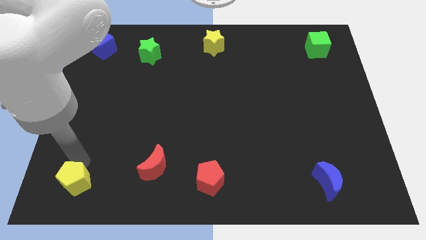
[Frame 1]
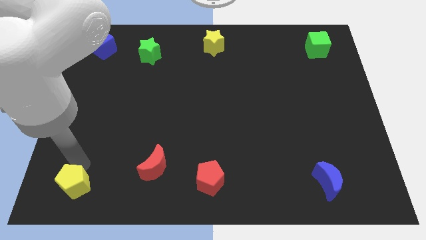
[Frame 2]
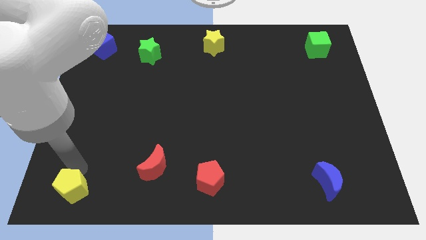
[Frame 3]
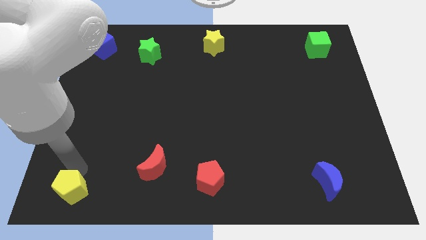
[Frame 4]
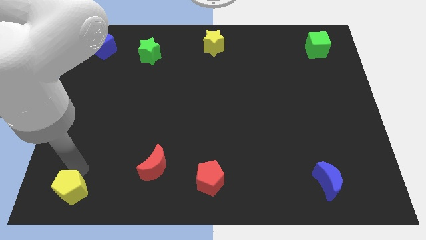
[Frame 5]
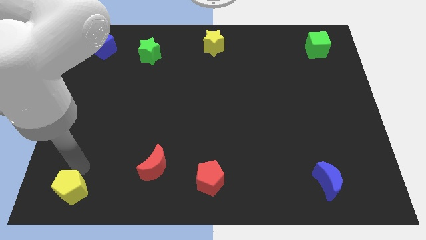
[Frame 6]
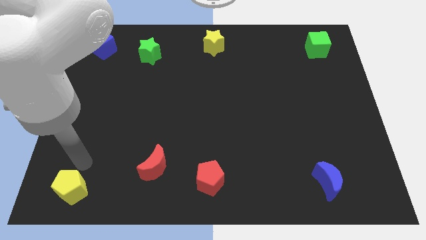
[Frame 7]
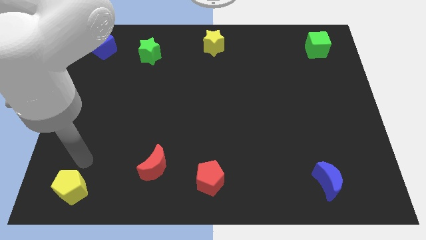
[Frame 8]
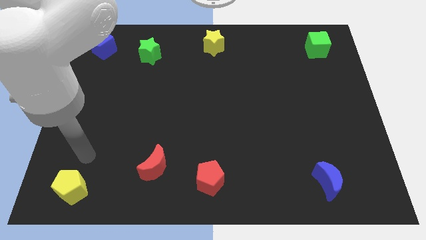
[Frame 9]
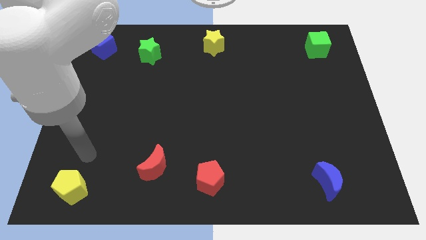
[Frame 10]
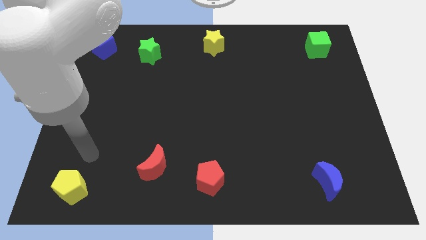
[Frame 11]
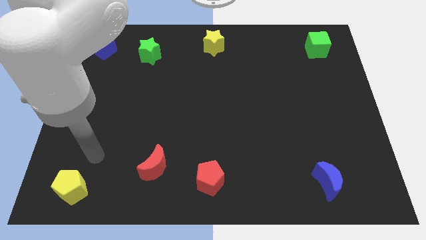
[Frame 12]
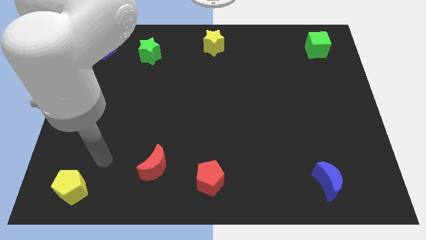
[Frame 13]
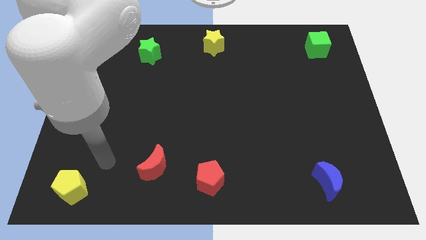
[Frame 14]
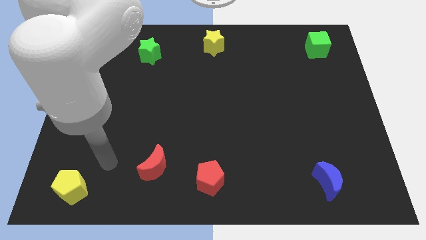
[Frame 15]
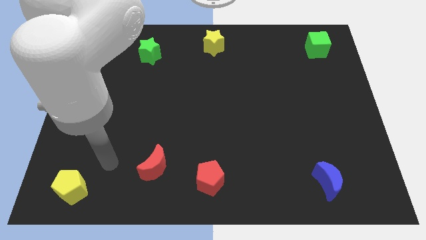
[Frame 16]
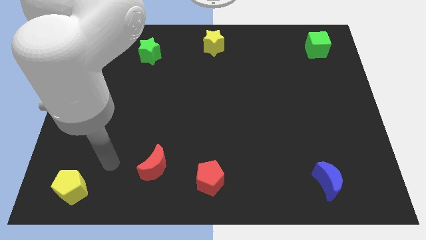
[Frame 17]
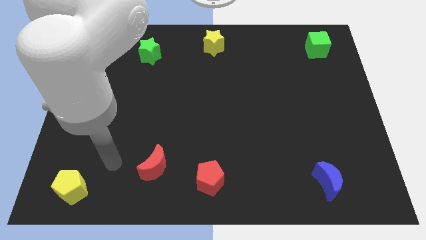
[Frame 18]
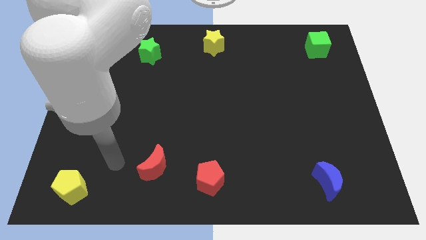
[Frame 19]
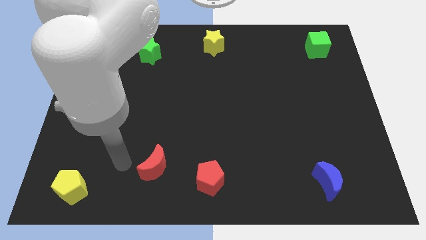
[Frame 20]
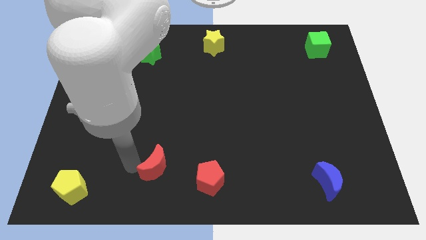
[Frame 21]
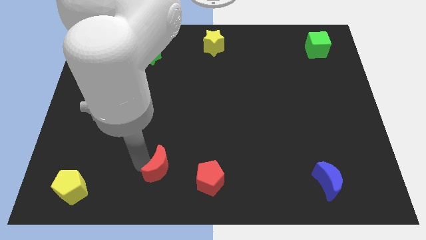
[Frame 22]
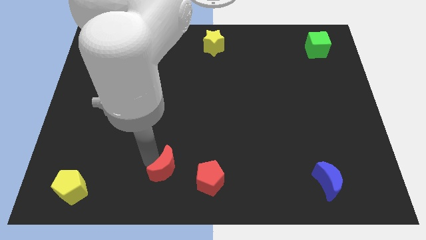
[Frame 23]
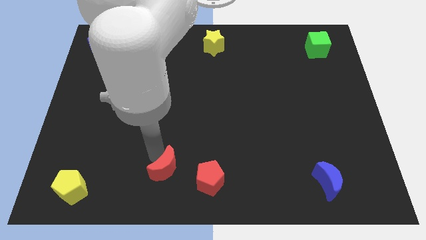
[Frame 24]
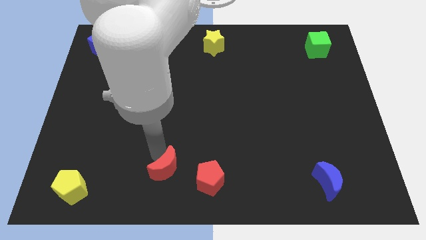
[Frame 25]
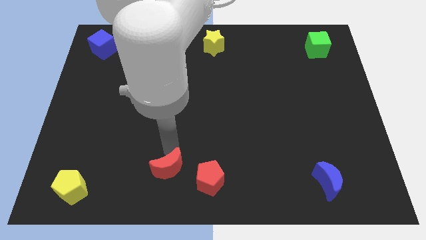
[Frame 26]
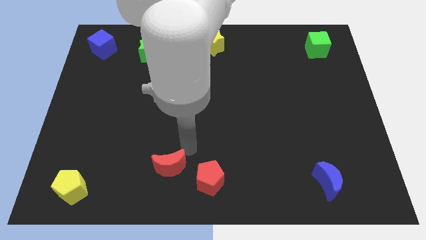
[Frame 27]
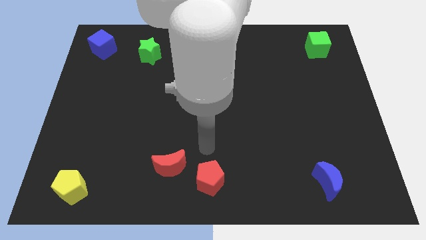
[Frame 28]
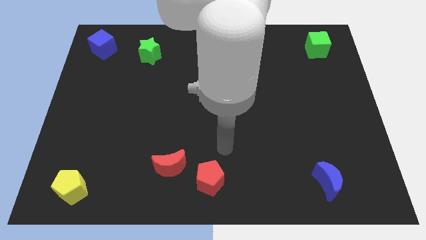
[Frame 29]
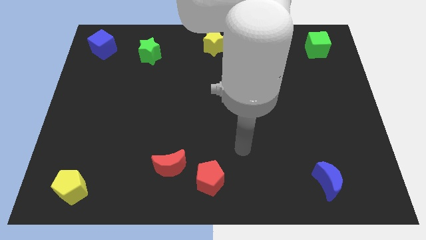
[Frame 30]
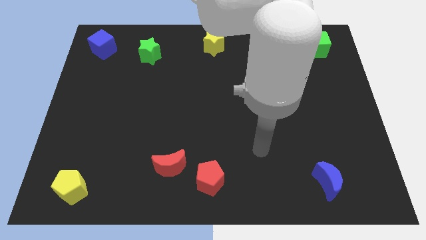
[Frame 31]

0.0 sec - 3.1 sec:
move your arm away from the yellow pentagon

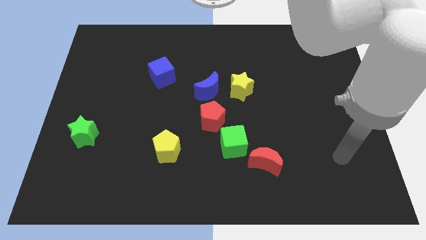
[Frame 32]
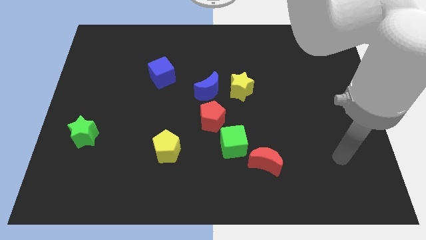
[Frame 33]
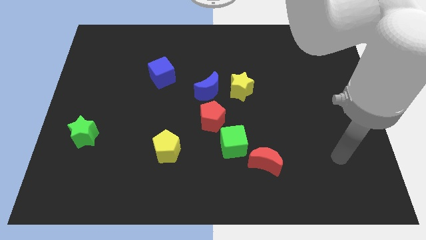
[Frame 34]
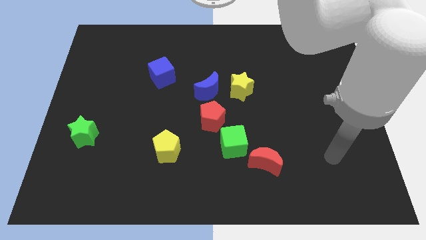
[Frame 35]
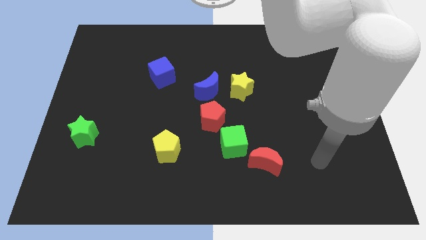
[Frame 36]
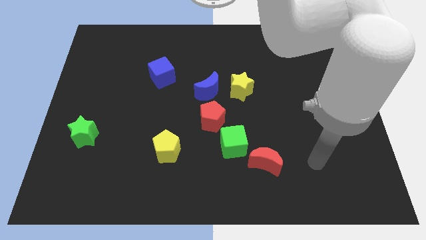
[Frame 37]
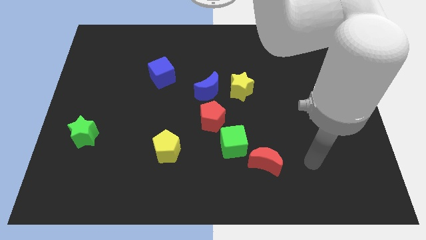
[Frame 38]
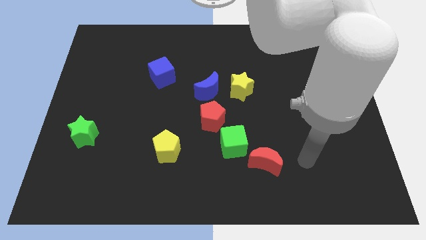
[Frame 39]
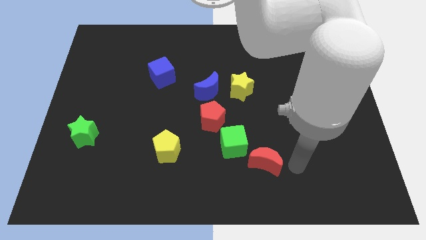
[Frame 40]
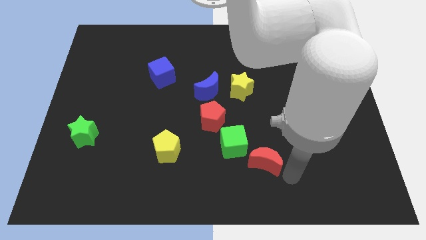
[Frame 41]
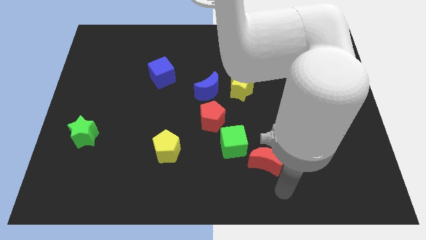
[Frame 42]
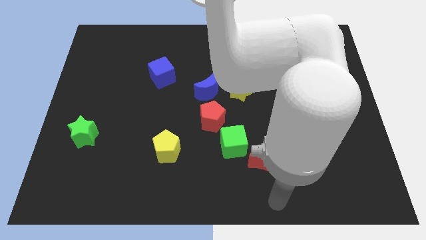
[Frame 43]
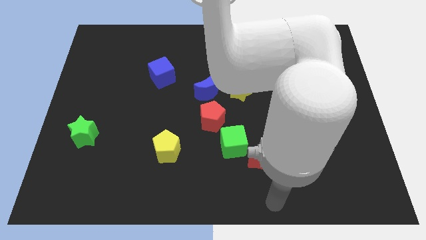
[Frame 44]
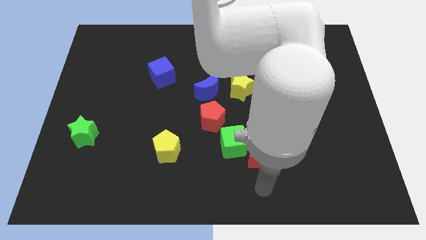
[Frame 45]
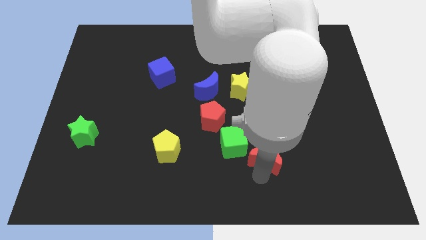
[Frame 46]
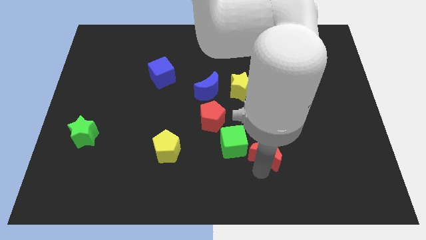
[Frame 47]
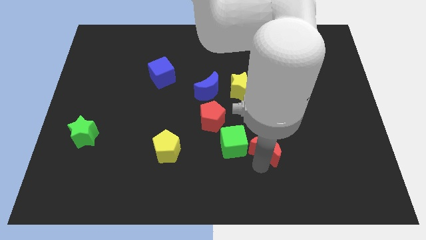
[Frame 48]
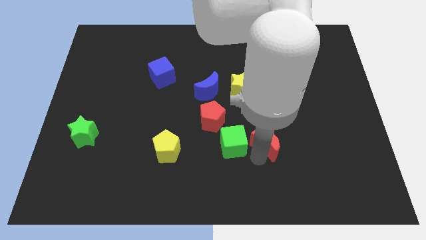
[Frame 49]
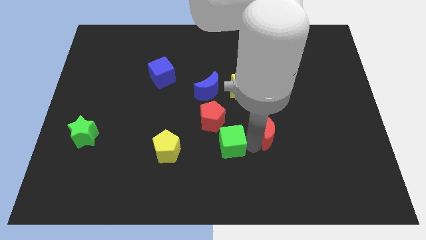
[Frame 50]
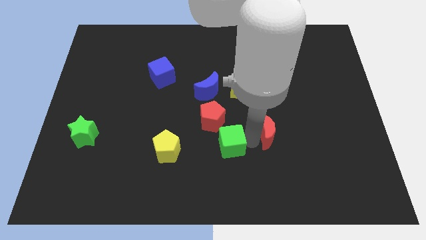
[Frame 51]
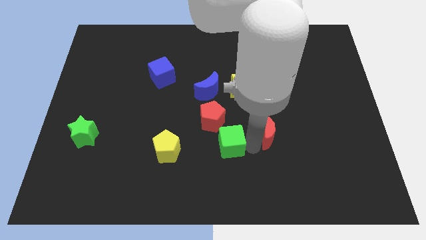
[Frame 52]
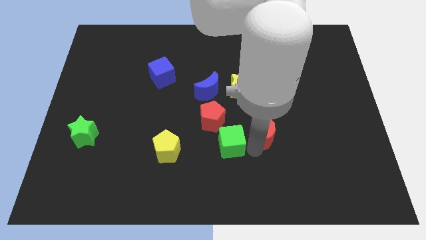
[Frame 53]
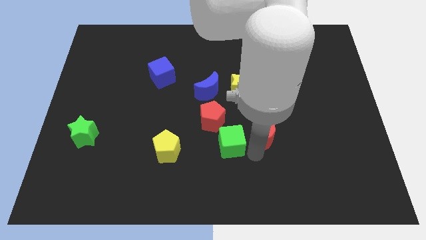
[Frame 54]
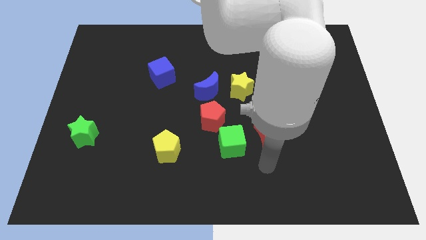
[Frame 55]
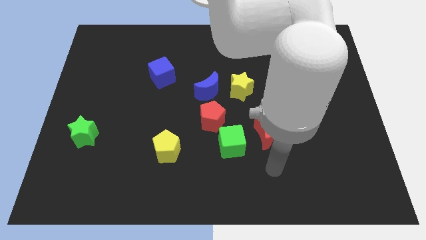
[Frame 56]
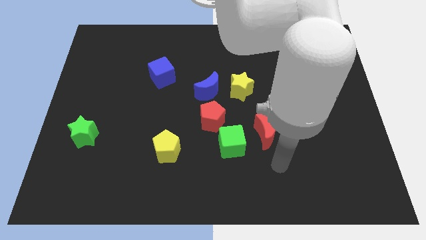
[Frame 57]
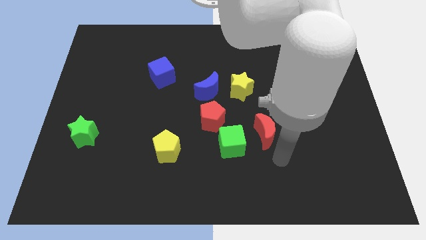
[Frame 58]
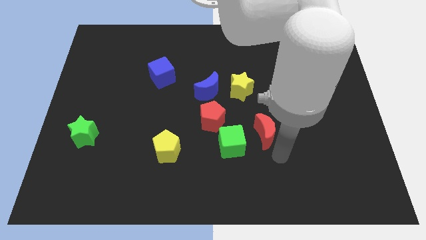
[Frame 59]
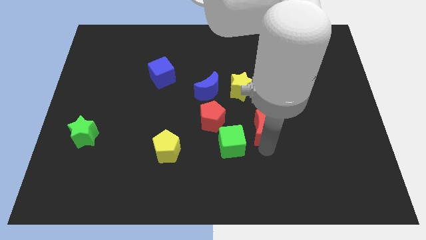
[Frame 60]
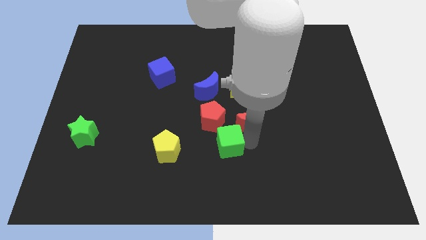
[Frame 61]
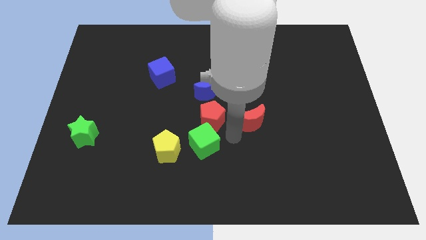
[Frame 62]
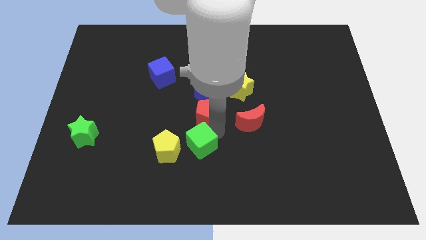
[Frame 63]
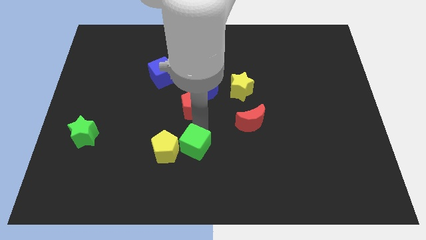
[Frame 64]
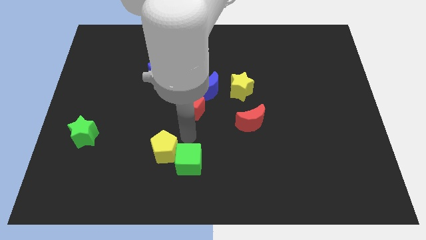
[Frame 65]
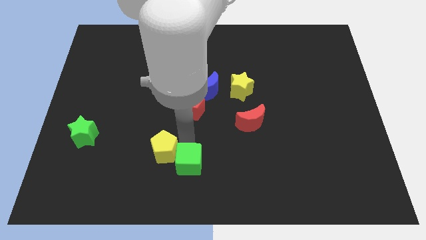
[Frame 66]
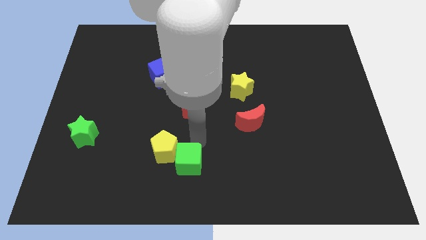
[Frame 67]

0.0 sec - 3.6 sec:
push the green cube into the yellow pentagon

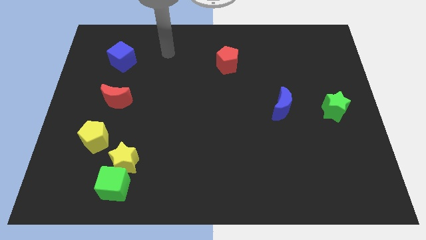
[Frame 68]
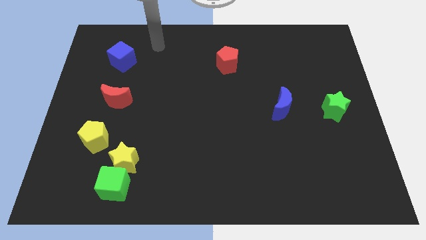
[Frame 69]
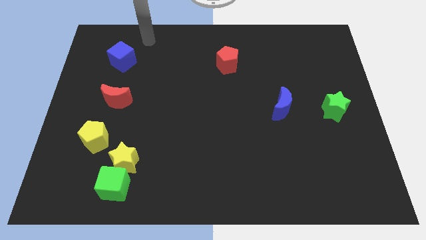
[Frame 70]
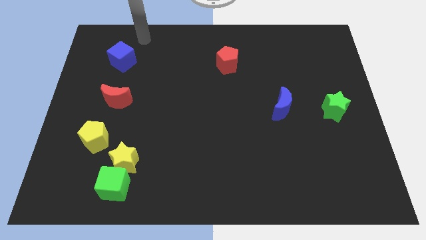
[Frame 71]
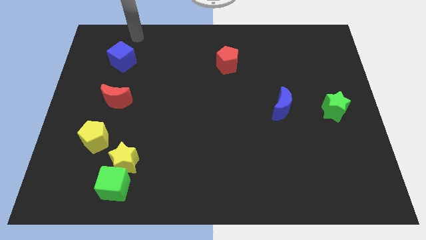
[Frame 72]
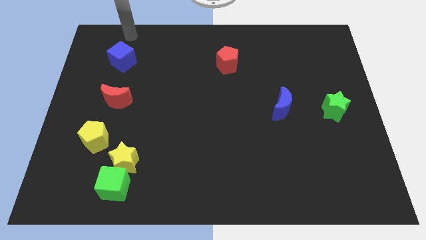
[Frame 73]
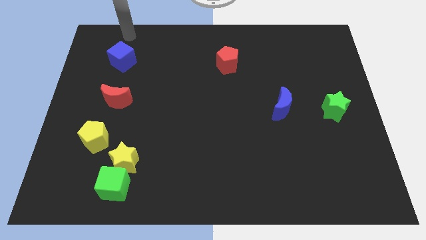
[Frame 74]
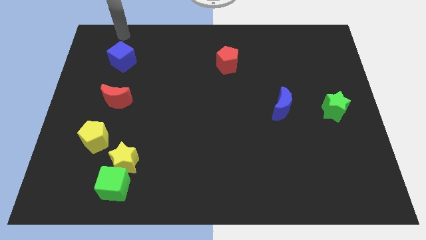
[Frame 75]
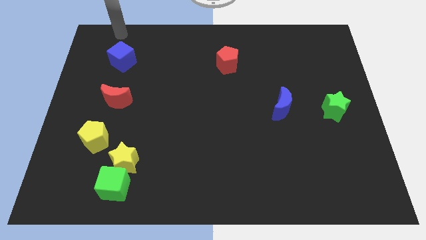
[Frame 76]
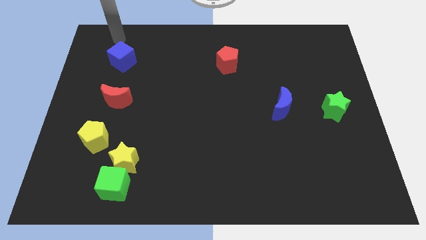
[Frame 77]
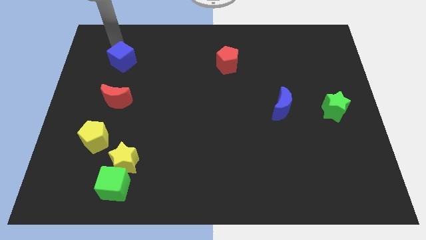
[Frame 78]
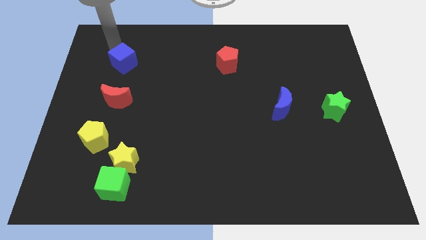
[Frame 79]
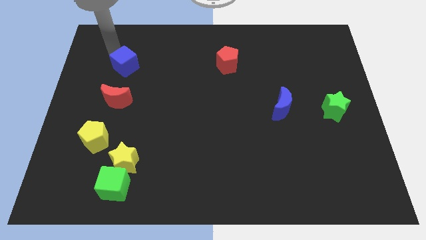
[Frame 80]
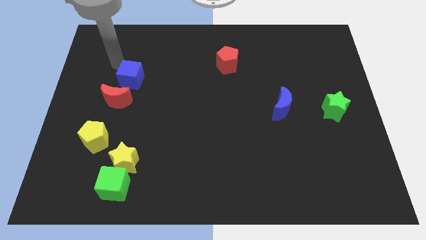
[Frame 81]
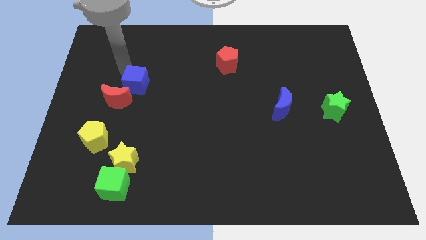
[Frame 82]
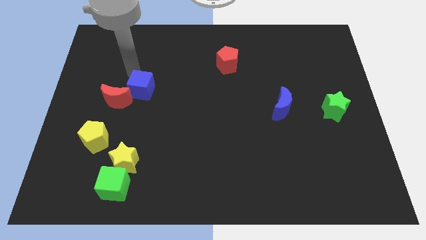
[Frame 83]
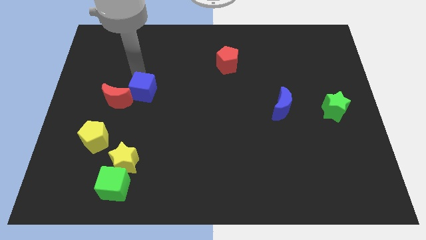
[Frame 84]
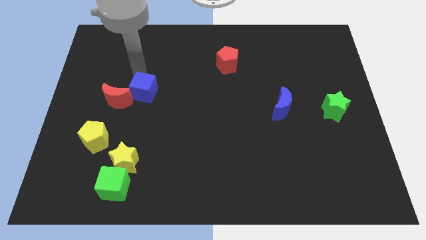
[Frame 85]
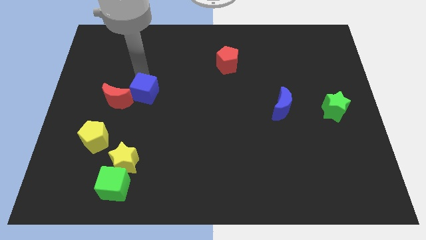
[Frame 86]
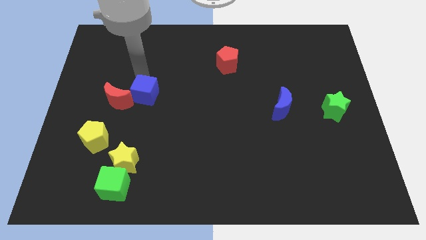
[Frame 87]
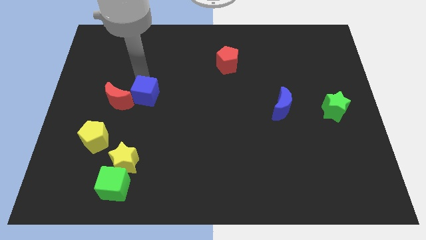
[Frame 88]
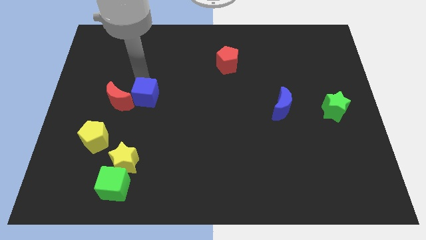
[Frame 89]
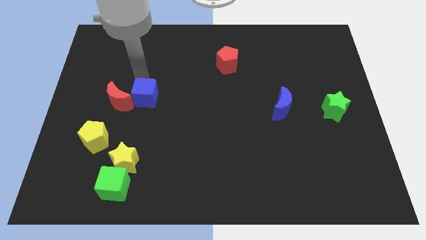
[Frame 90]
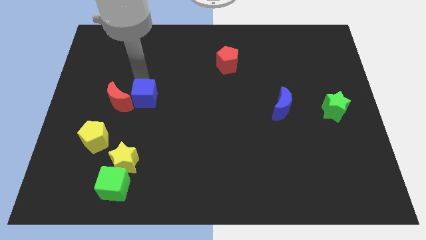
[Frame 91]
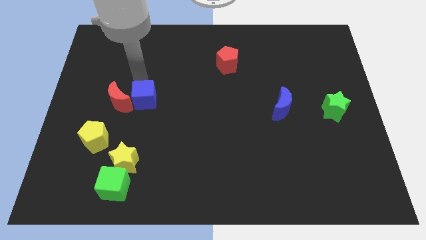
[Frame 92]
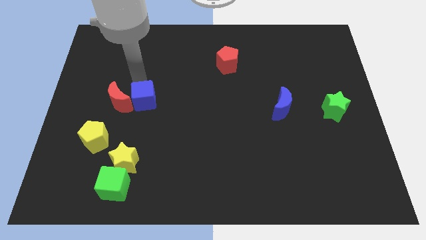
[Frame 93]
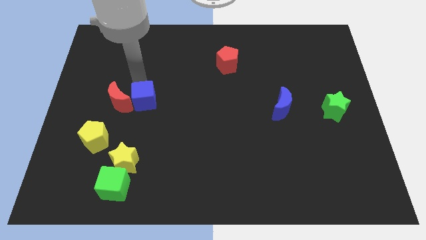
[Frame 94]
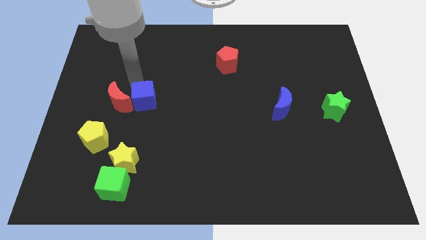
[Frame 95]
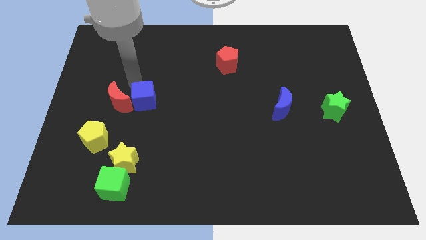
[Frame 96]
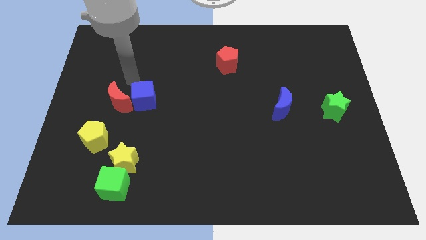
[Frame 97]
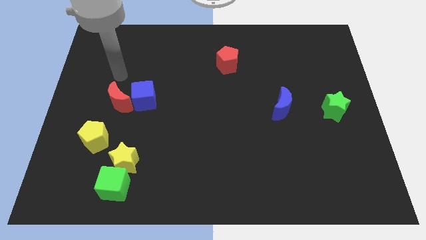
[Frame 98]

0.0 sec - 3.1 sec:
make the blue cube to touch the red crescent
